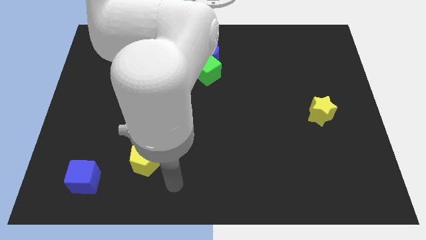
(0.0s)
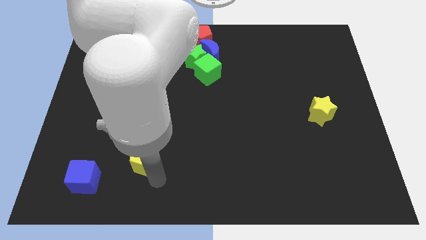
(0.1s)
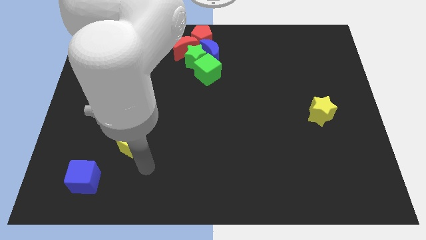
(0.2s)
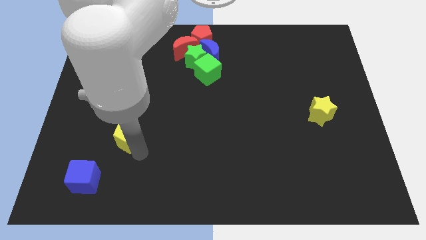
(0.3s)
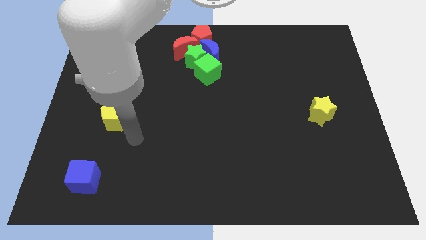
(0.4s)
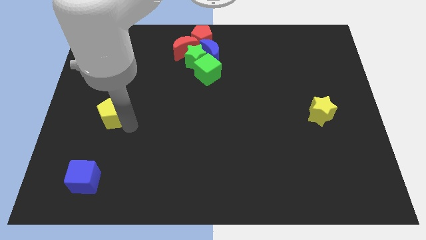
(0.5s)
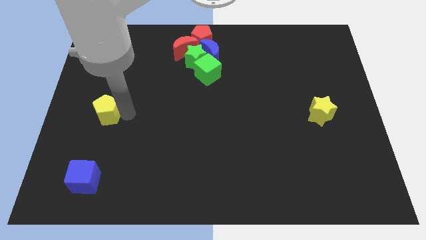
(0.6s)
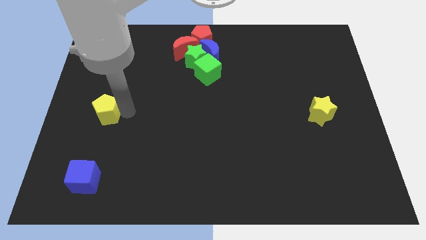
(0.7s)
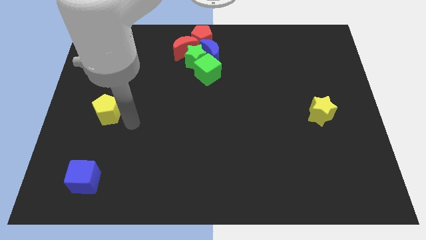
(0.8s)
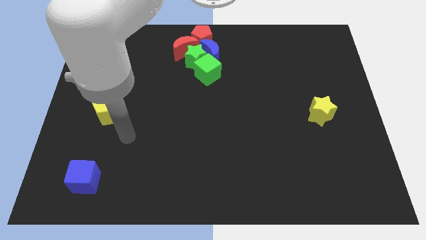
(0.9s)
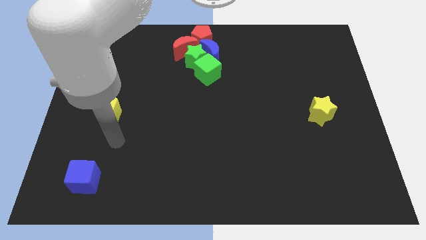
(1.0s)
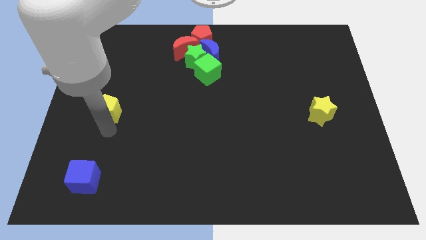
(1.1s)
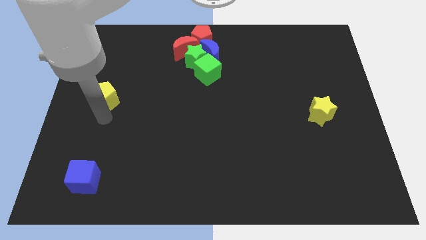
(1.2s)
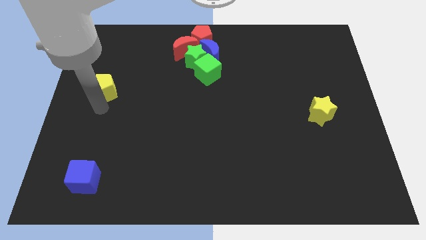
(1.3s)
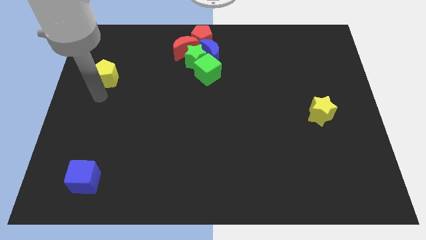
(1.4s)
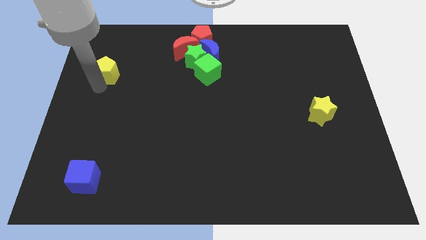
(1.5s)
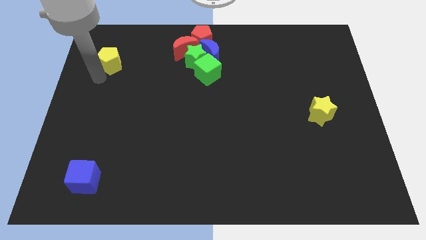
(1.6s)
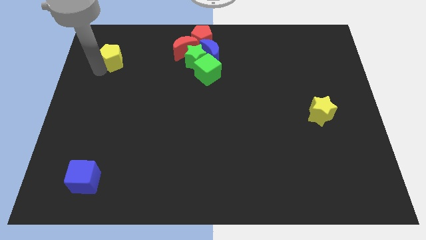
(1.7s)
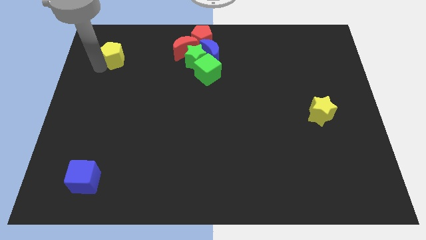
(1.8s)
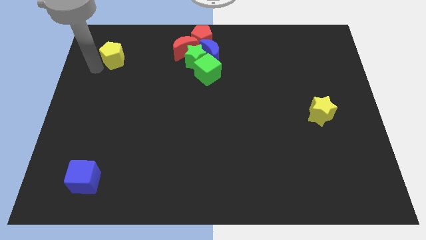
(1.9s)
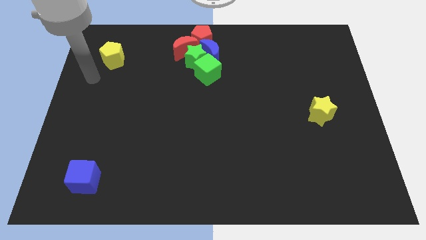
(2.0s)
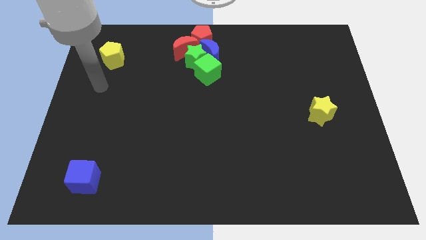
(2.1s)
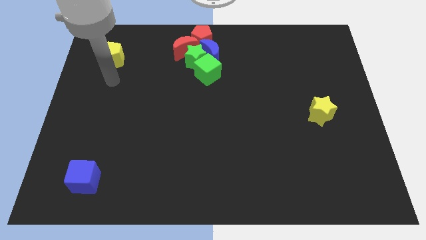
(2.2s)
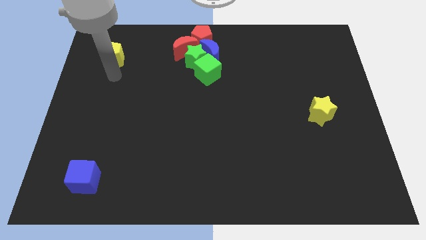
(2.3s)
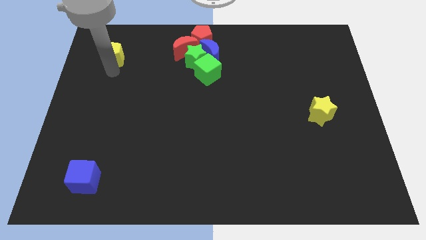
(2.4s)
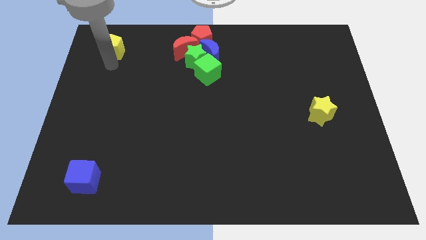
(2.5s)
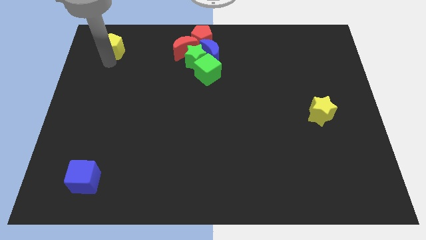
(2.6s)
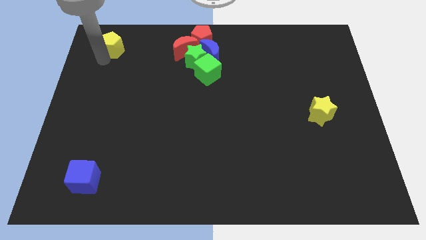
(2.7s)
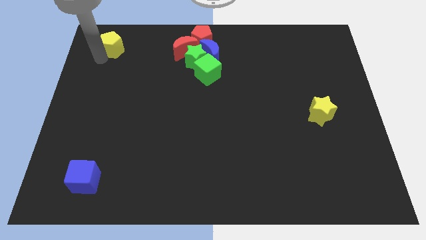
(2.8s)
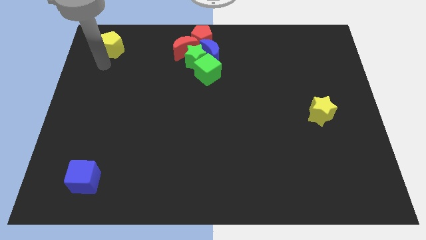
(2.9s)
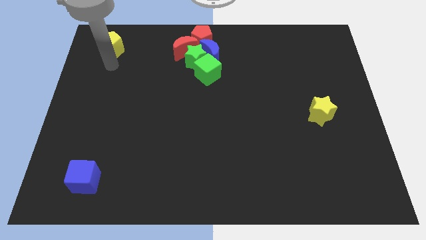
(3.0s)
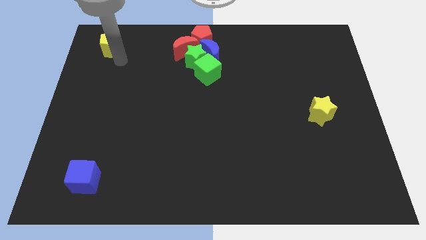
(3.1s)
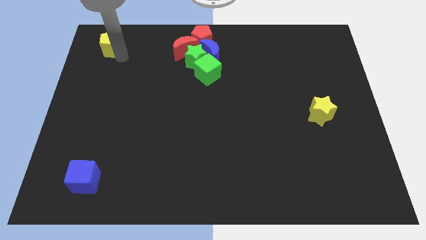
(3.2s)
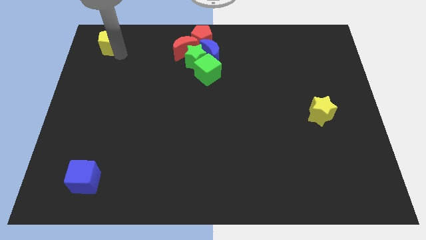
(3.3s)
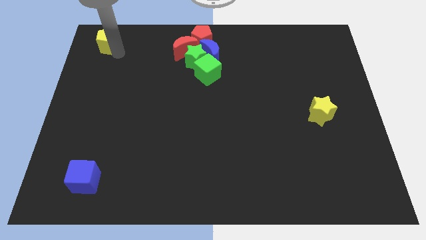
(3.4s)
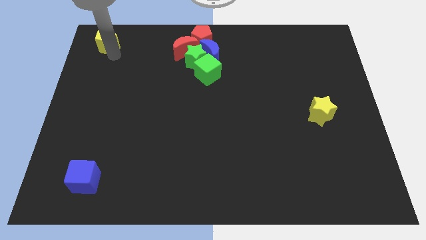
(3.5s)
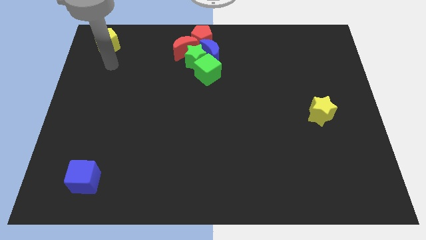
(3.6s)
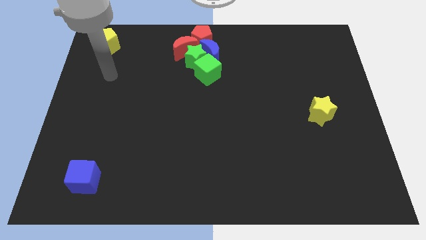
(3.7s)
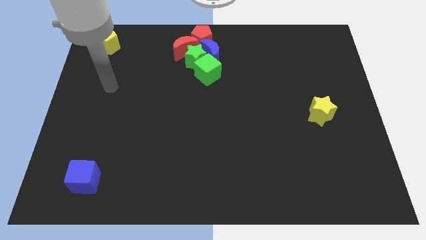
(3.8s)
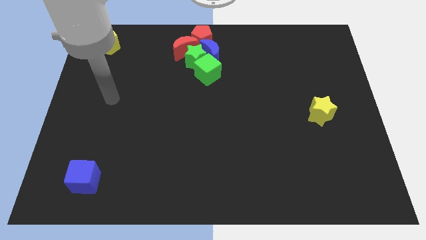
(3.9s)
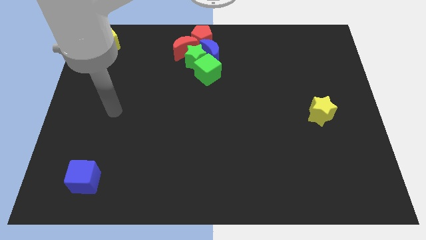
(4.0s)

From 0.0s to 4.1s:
slide yellow pentagon towards top left

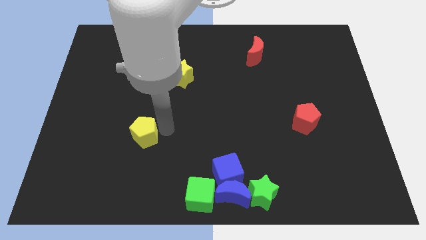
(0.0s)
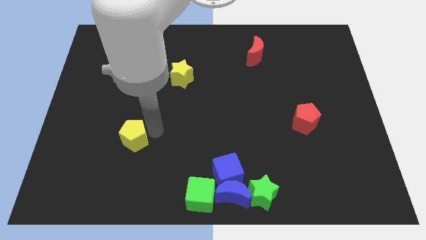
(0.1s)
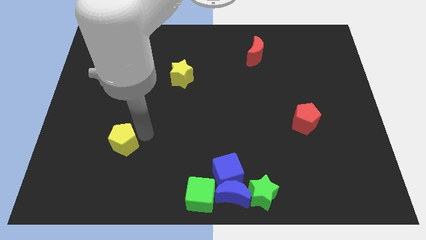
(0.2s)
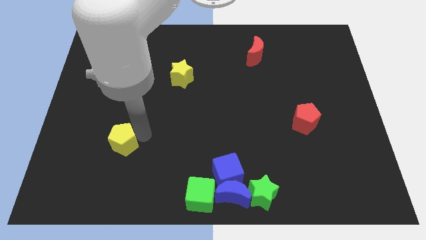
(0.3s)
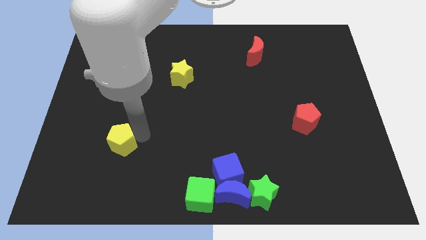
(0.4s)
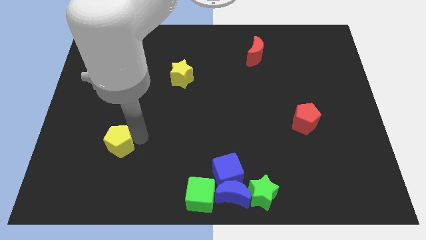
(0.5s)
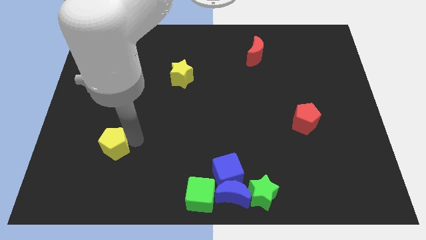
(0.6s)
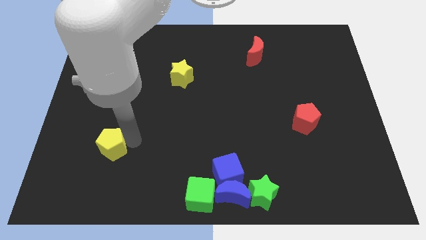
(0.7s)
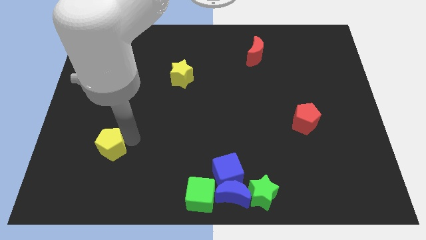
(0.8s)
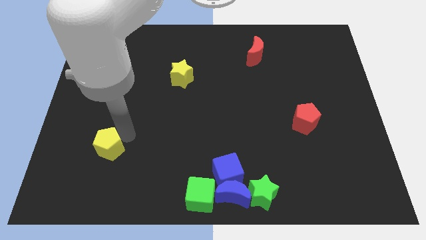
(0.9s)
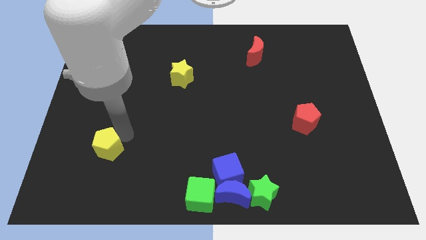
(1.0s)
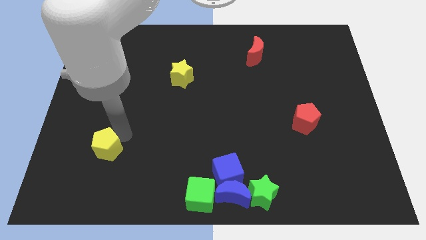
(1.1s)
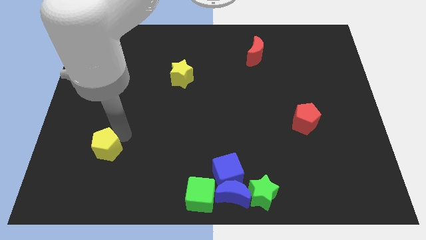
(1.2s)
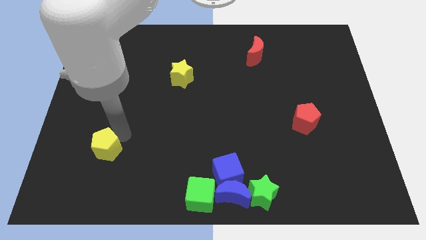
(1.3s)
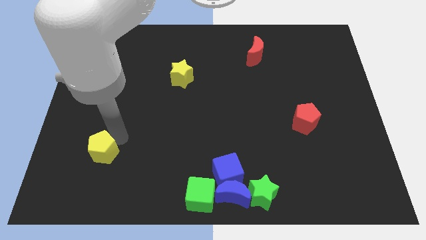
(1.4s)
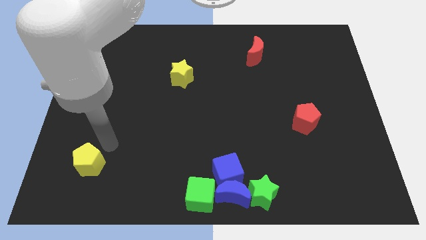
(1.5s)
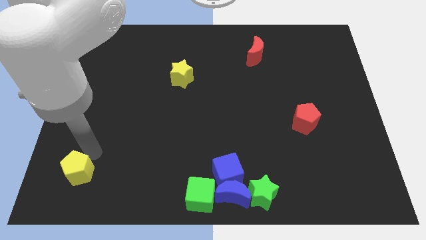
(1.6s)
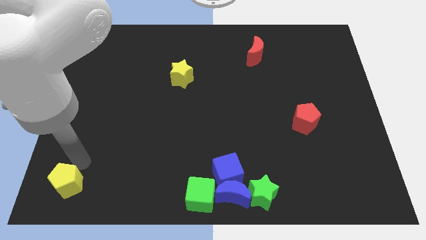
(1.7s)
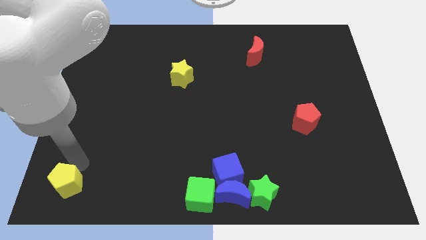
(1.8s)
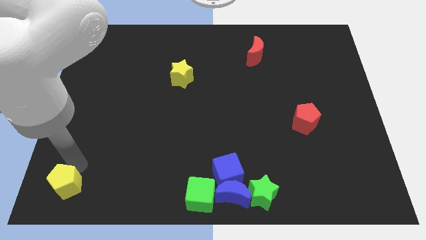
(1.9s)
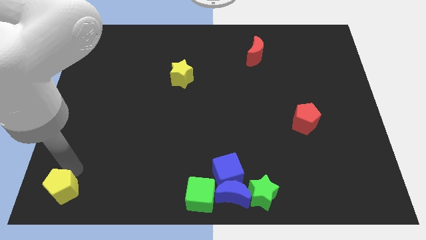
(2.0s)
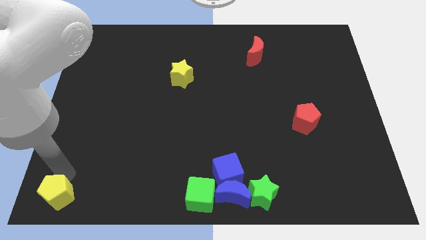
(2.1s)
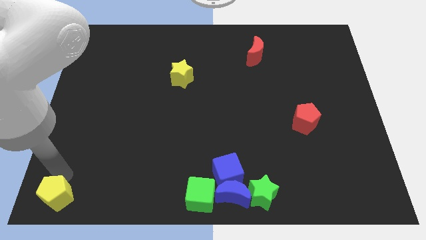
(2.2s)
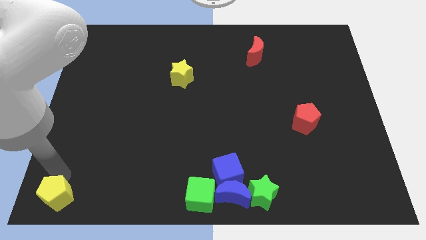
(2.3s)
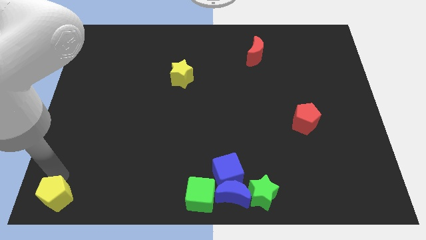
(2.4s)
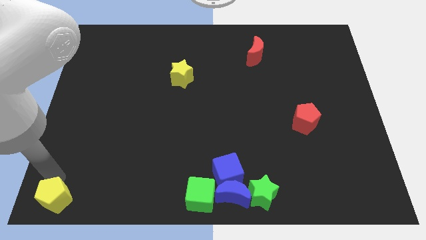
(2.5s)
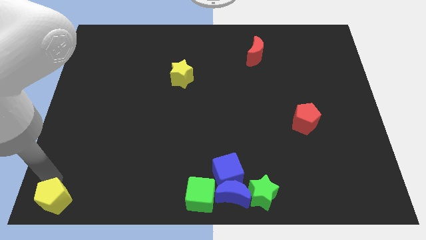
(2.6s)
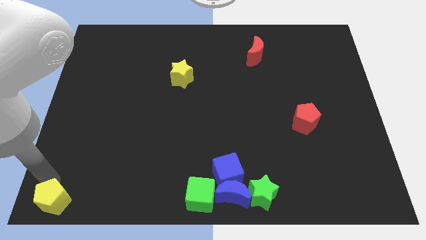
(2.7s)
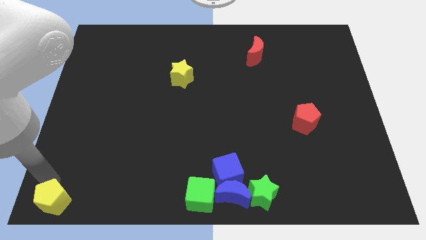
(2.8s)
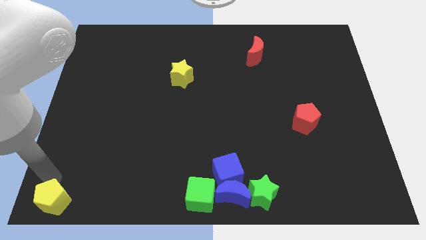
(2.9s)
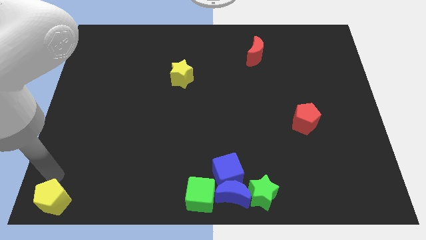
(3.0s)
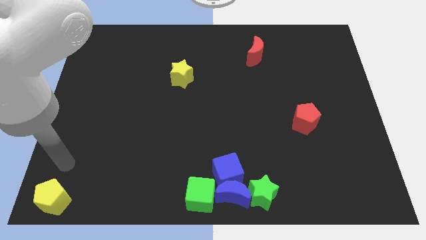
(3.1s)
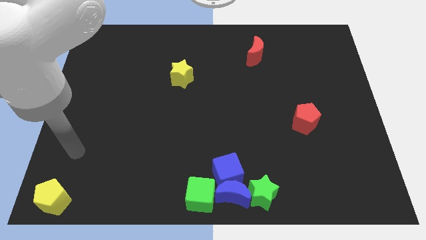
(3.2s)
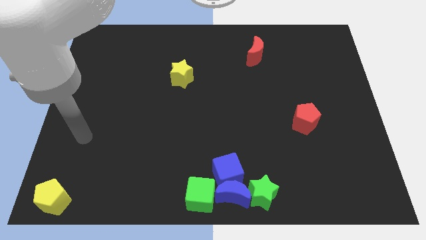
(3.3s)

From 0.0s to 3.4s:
push the yellow pentagon to the bottom left of the board

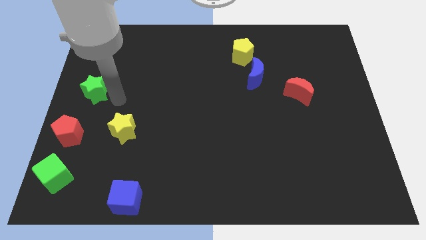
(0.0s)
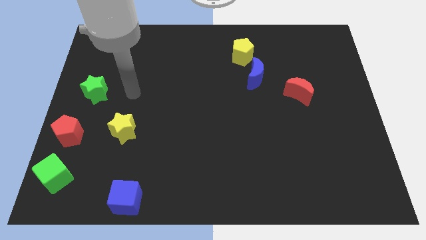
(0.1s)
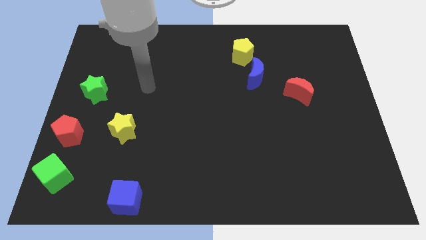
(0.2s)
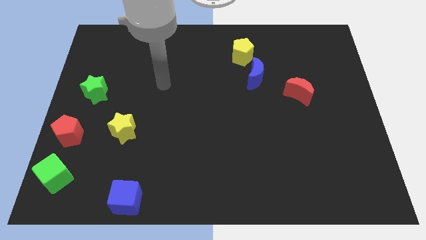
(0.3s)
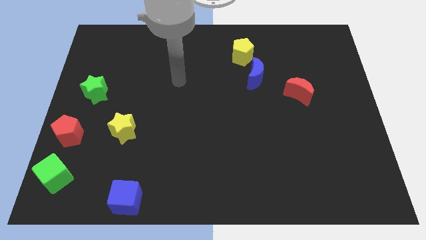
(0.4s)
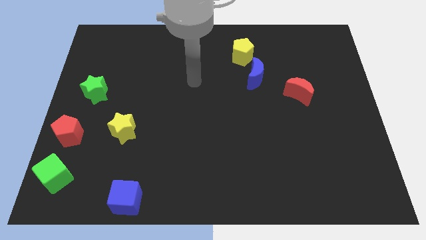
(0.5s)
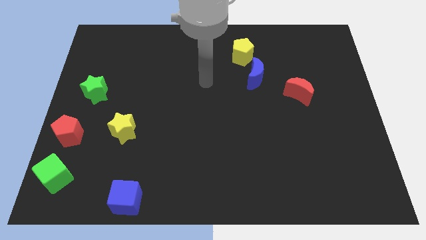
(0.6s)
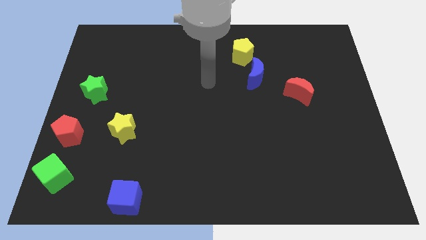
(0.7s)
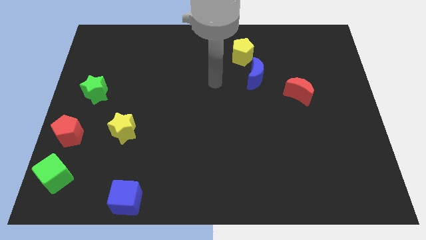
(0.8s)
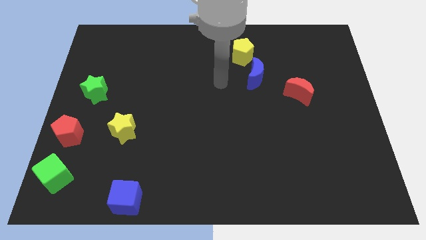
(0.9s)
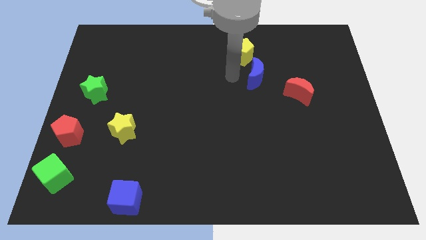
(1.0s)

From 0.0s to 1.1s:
point your arm at the left of the blue crescent

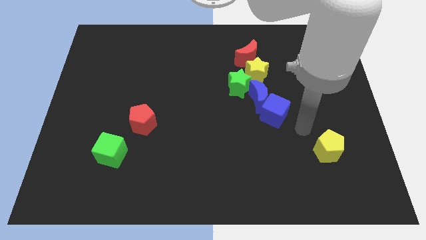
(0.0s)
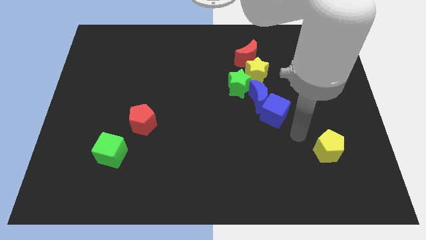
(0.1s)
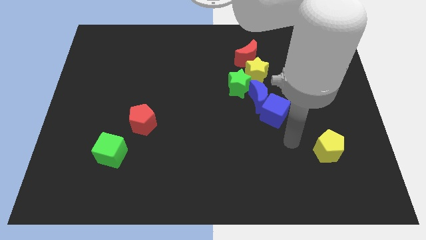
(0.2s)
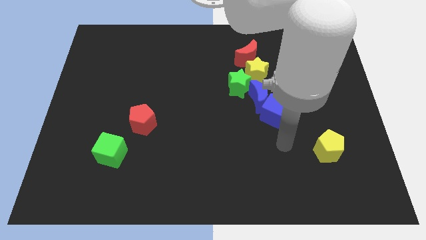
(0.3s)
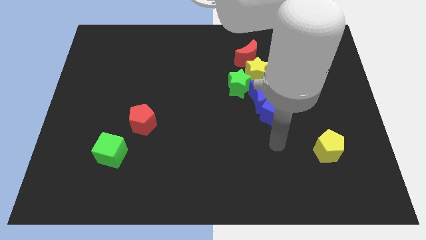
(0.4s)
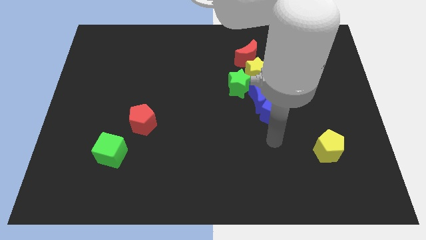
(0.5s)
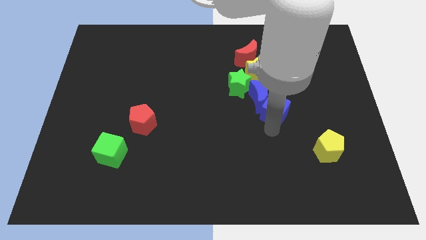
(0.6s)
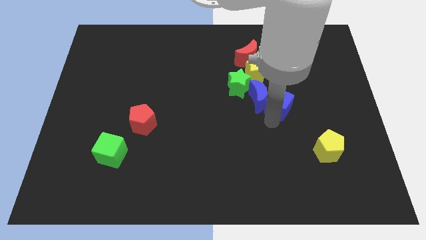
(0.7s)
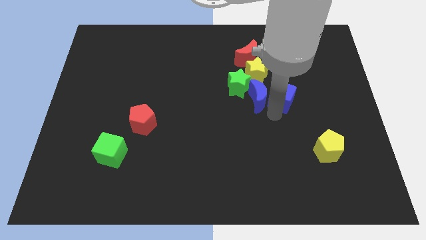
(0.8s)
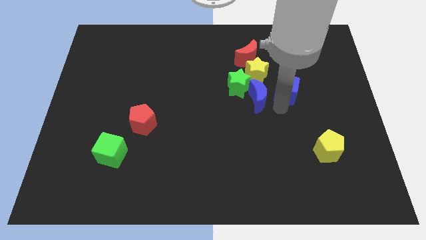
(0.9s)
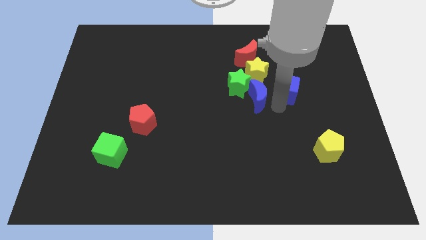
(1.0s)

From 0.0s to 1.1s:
separate the blue cube from blue moon
